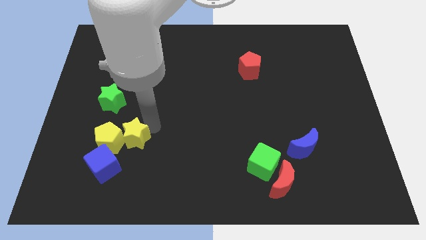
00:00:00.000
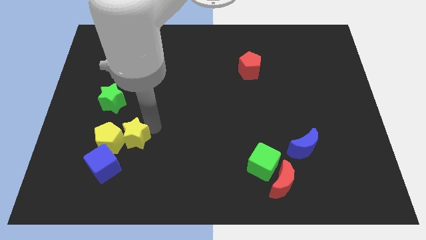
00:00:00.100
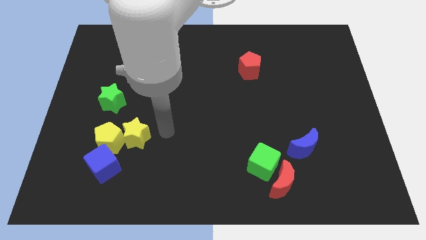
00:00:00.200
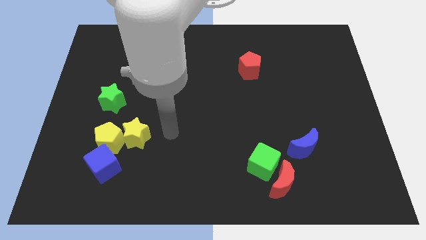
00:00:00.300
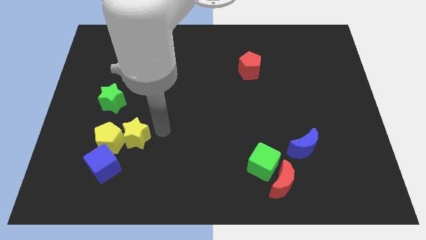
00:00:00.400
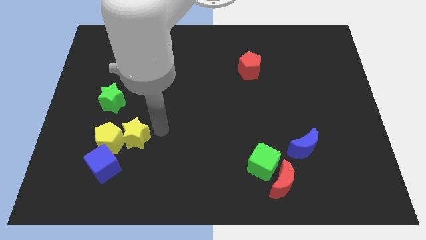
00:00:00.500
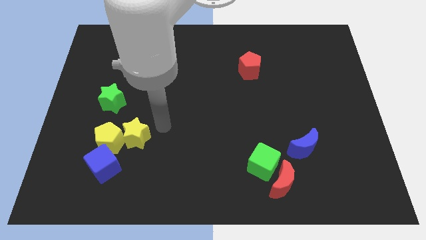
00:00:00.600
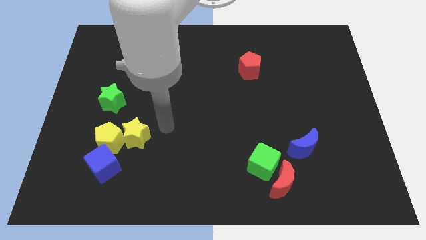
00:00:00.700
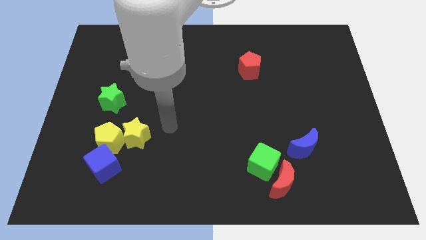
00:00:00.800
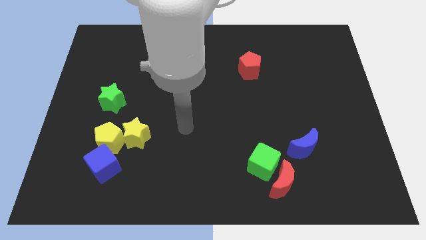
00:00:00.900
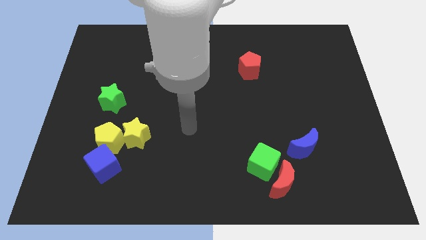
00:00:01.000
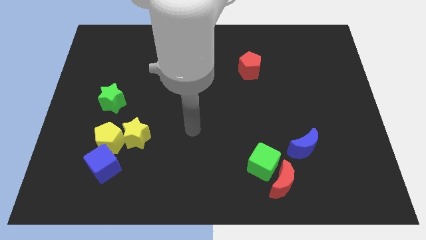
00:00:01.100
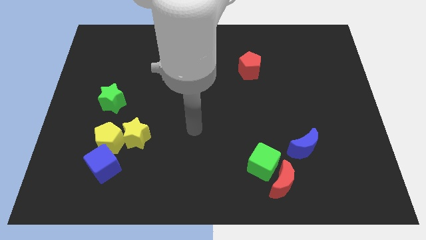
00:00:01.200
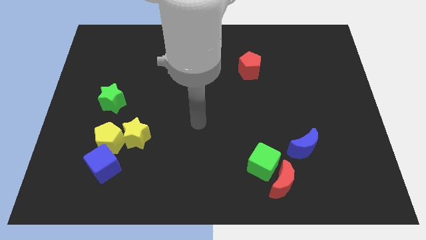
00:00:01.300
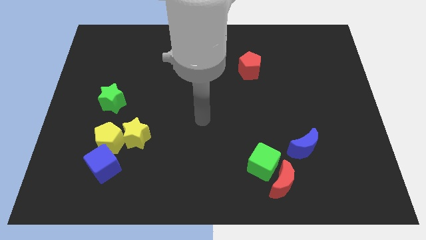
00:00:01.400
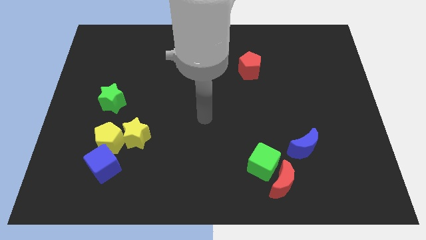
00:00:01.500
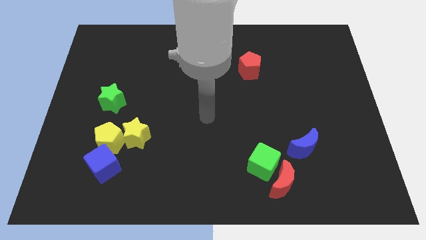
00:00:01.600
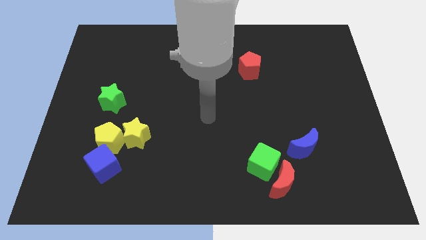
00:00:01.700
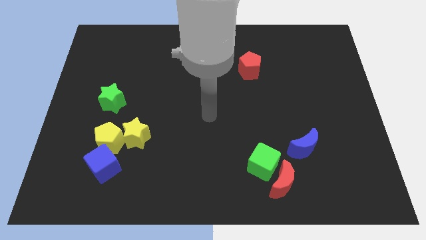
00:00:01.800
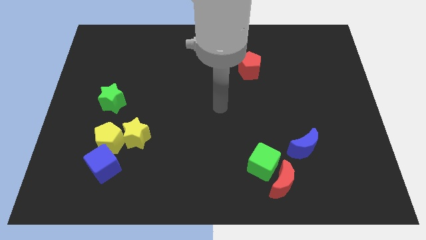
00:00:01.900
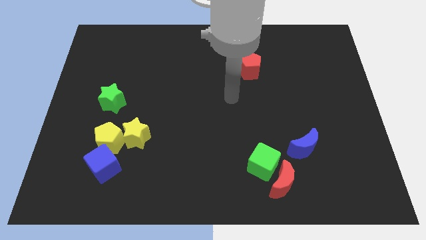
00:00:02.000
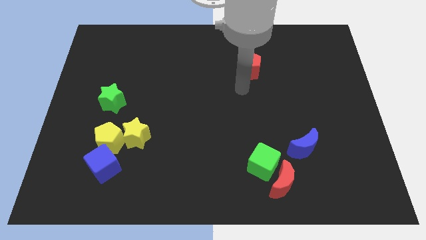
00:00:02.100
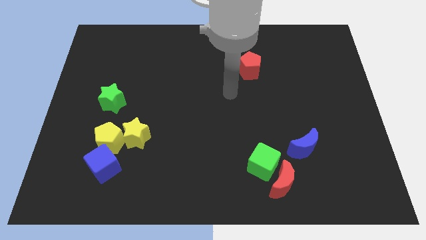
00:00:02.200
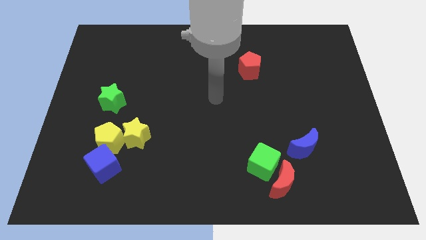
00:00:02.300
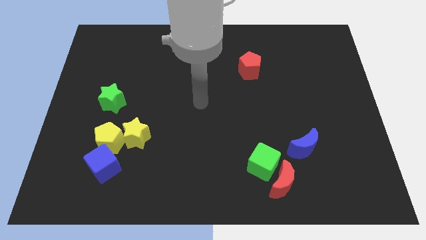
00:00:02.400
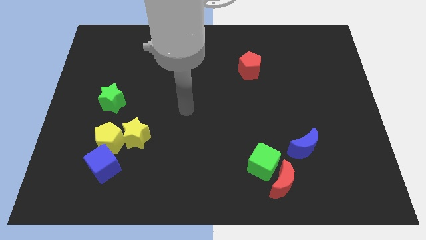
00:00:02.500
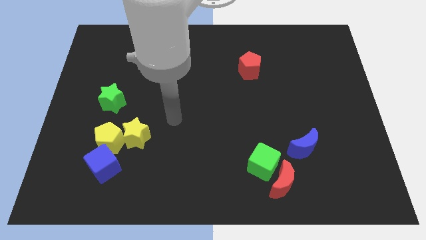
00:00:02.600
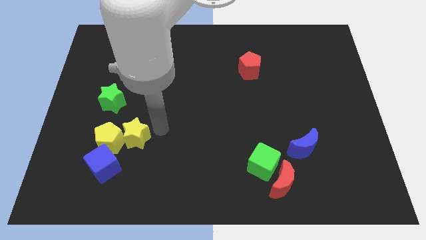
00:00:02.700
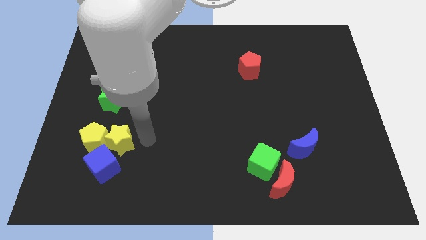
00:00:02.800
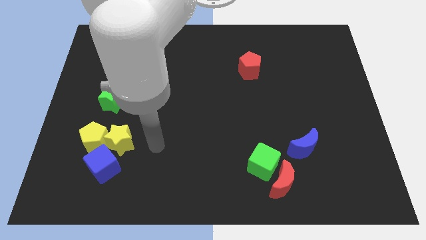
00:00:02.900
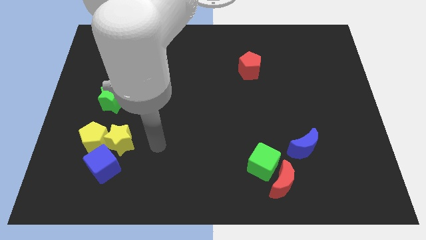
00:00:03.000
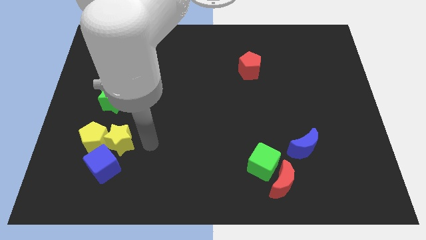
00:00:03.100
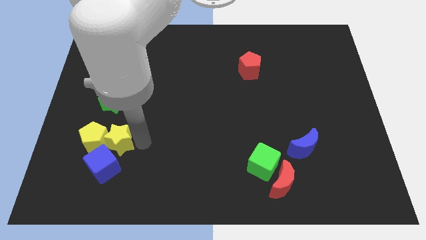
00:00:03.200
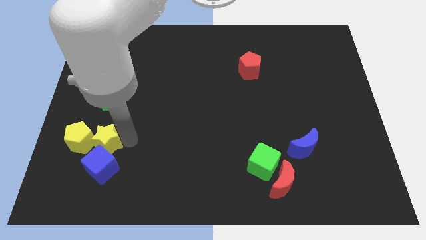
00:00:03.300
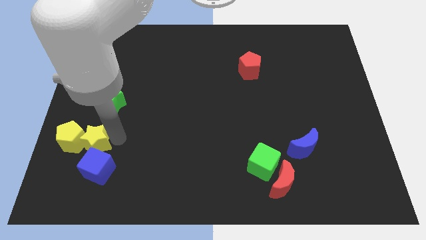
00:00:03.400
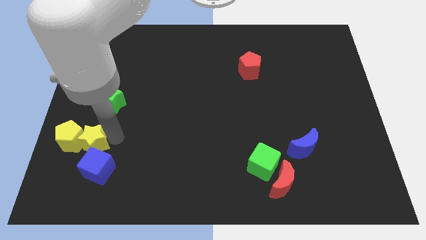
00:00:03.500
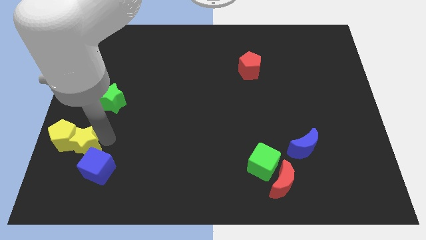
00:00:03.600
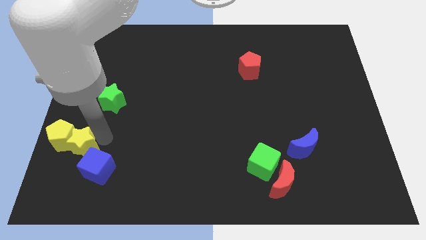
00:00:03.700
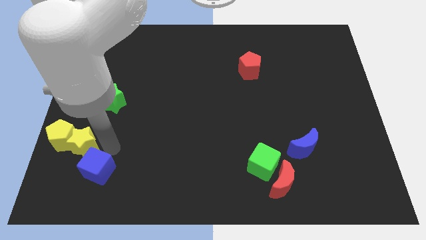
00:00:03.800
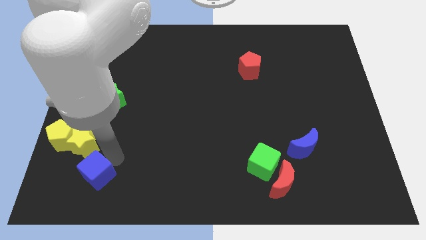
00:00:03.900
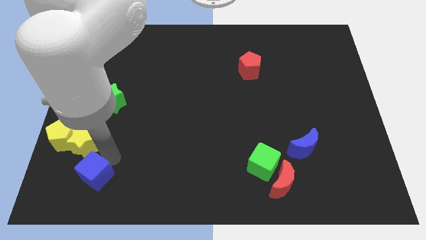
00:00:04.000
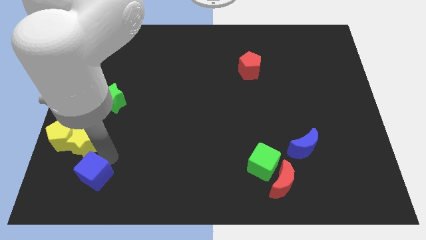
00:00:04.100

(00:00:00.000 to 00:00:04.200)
move the yellow blocks to the left

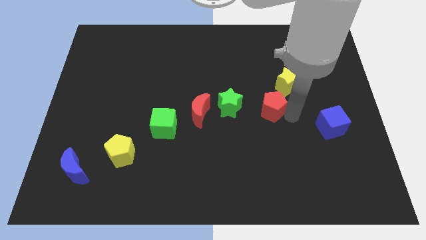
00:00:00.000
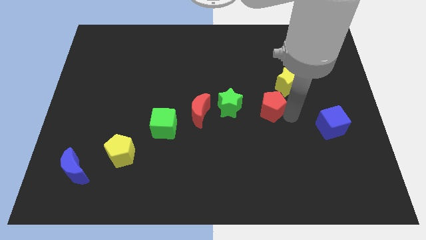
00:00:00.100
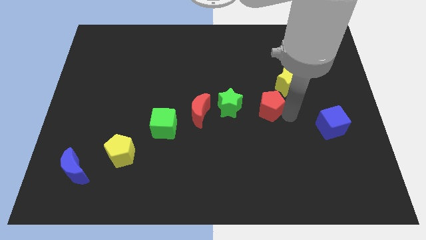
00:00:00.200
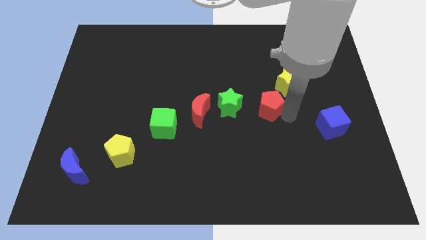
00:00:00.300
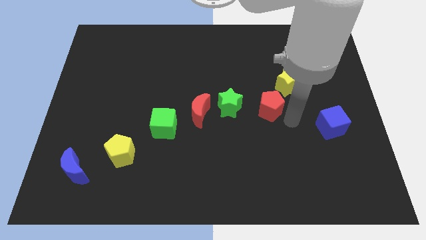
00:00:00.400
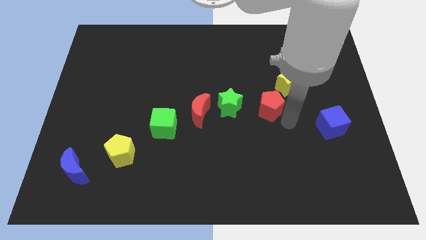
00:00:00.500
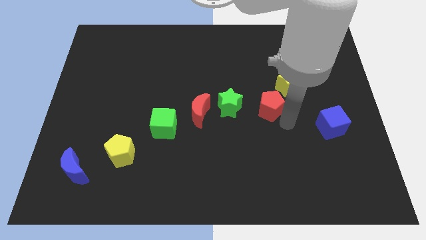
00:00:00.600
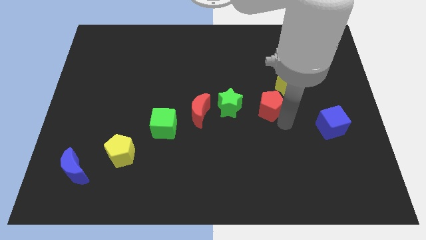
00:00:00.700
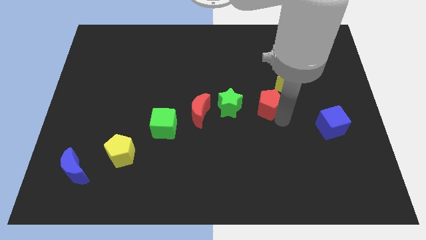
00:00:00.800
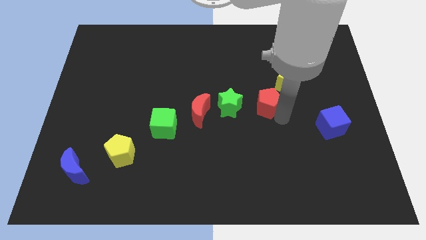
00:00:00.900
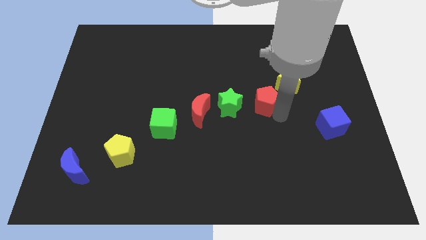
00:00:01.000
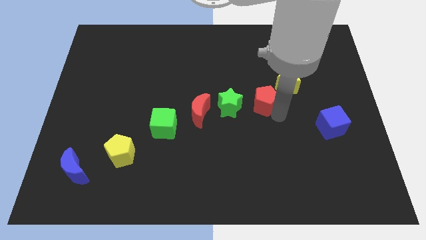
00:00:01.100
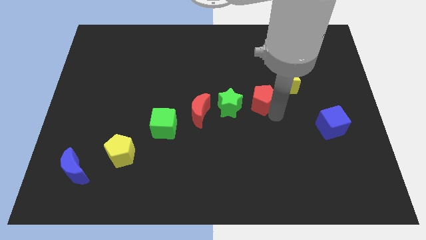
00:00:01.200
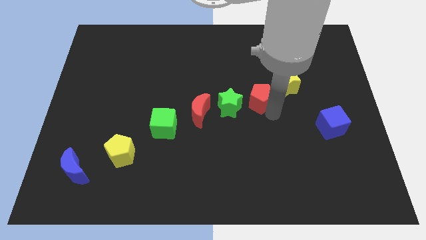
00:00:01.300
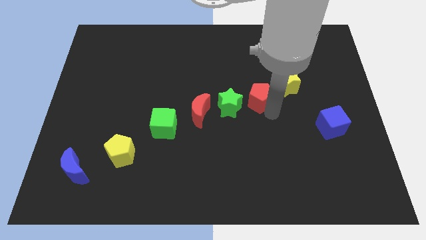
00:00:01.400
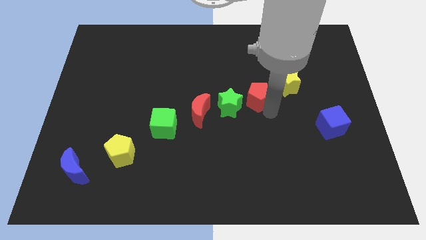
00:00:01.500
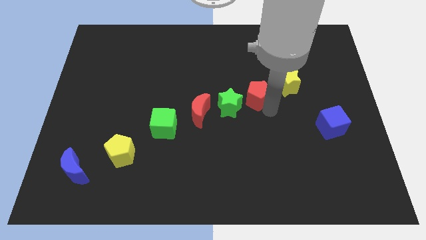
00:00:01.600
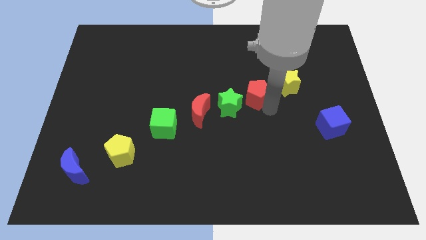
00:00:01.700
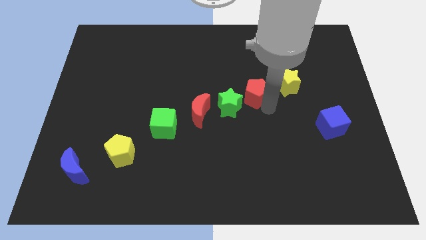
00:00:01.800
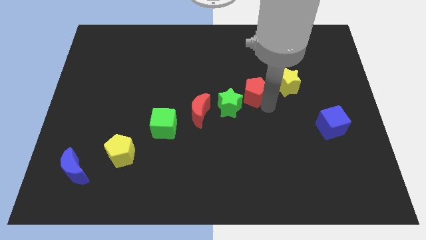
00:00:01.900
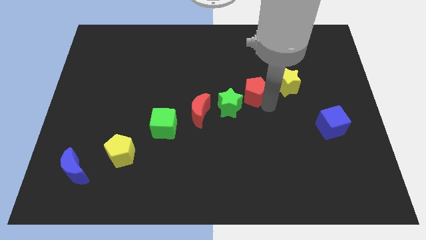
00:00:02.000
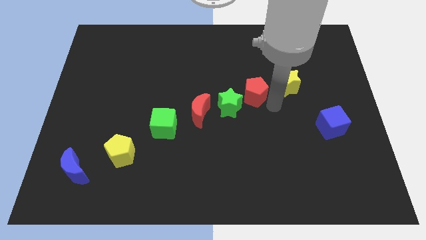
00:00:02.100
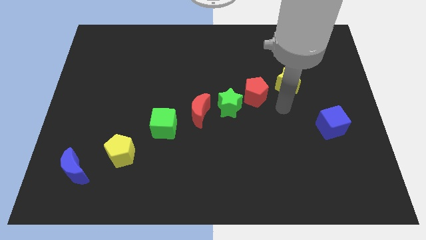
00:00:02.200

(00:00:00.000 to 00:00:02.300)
place the red pentagon between the green star and yellow star

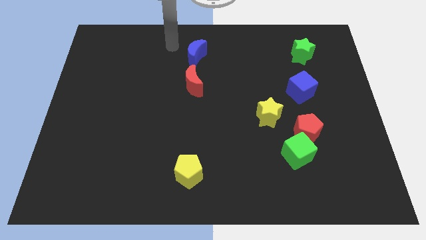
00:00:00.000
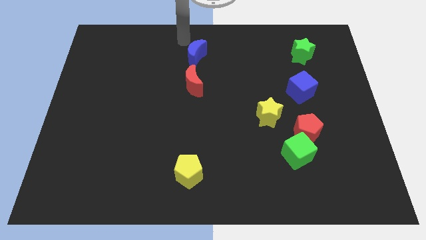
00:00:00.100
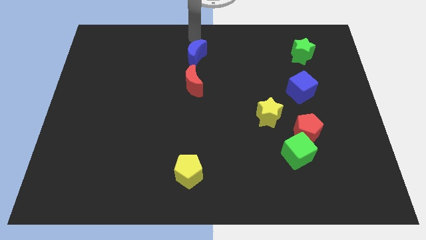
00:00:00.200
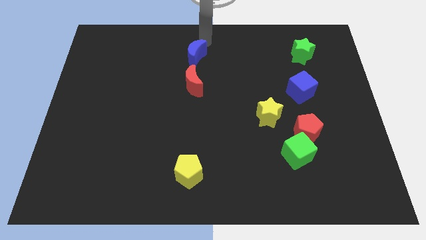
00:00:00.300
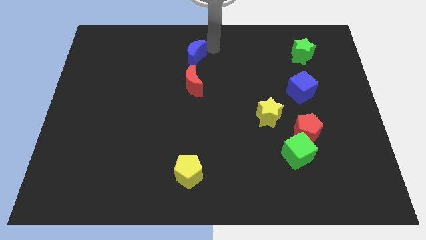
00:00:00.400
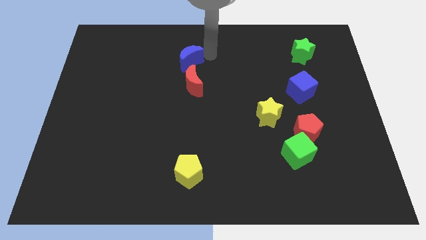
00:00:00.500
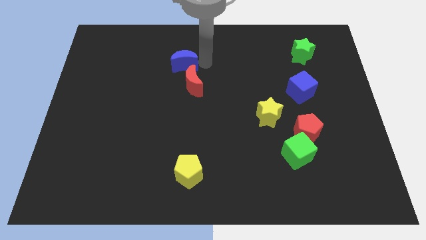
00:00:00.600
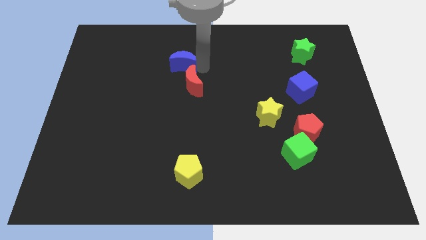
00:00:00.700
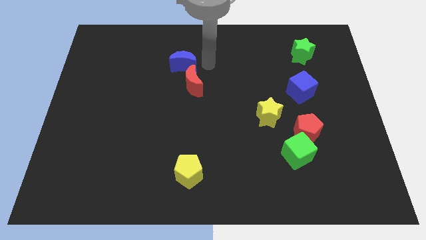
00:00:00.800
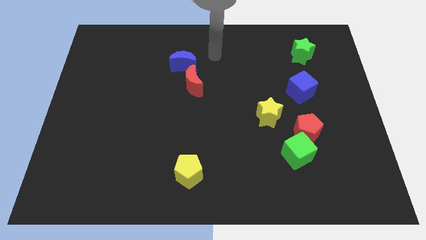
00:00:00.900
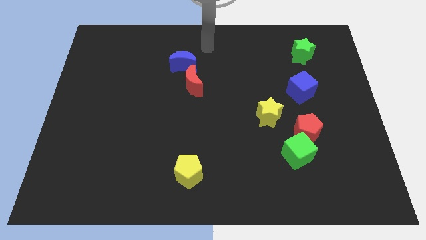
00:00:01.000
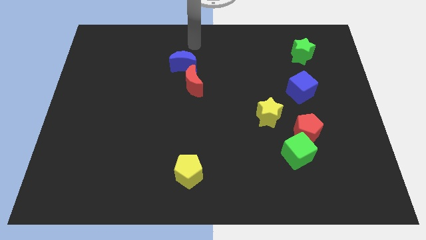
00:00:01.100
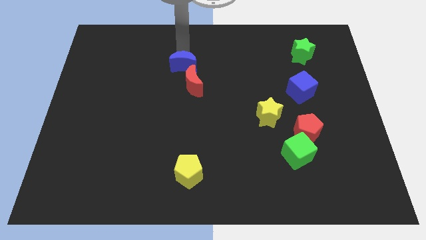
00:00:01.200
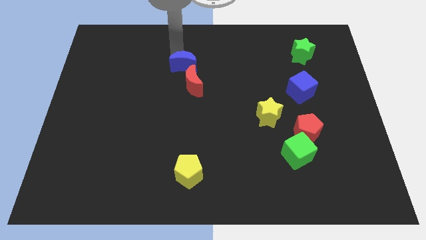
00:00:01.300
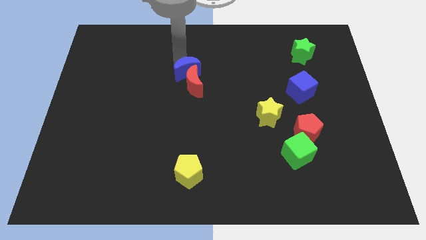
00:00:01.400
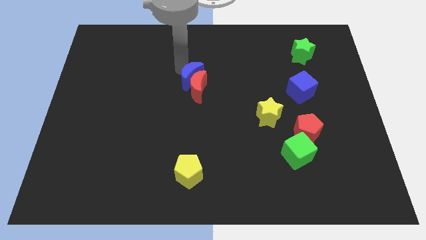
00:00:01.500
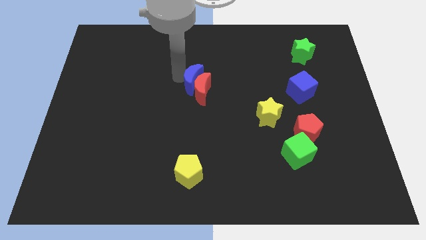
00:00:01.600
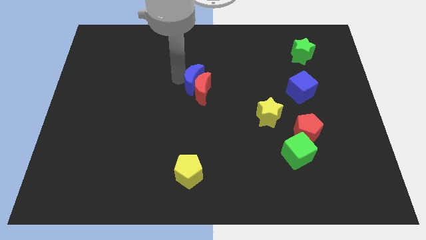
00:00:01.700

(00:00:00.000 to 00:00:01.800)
move blue moon into red moon

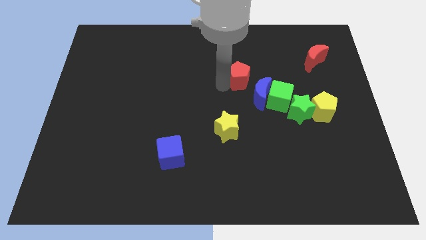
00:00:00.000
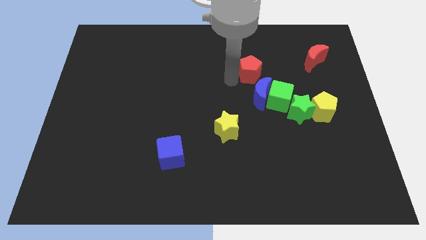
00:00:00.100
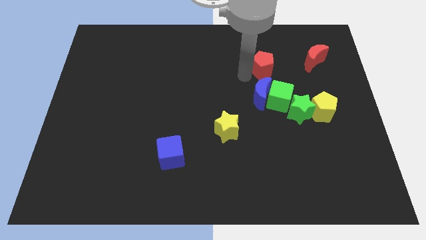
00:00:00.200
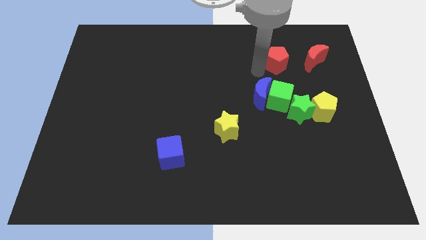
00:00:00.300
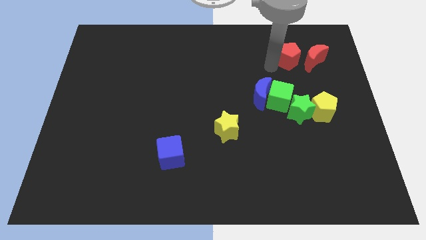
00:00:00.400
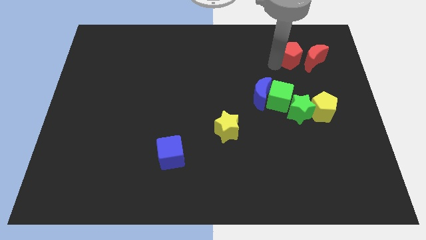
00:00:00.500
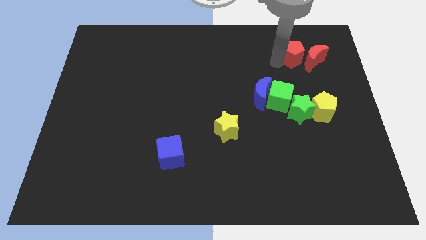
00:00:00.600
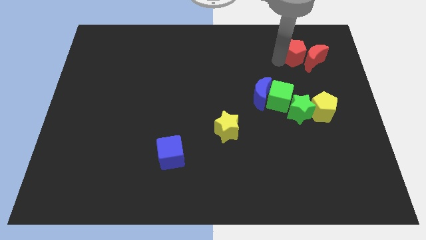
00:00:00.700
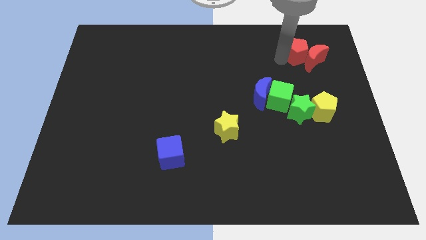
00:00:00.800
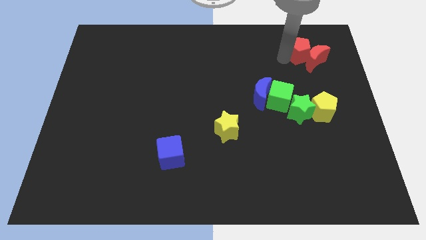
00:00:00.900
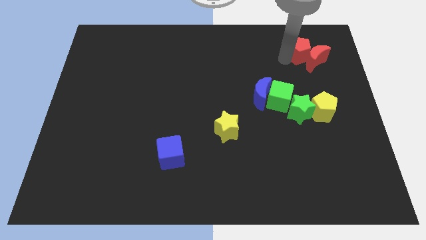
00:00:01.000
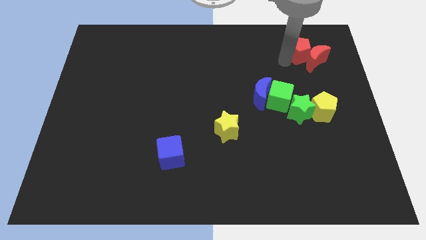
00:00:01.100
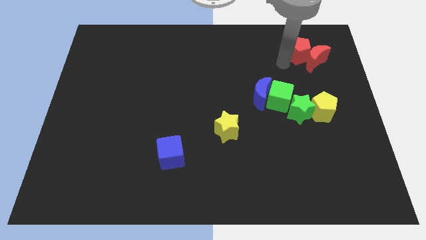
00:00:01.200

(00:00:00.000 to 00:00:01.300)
push the red pentagon into the red crescent
